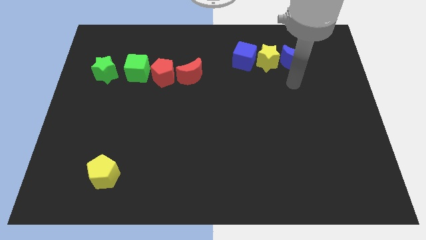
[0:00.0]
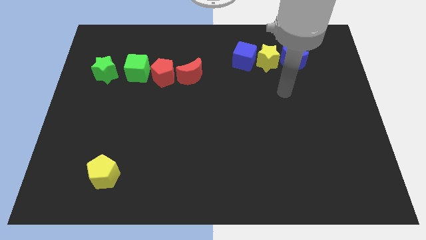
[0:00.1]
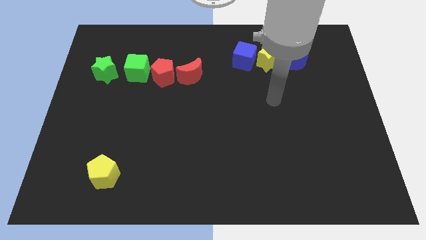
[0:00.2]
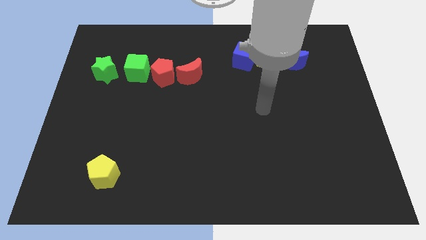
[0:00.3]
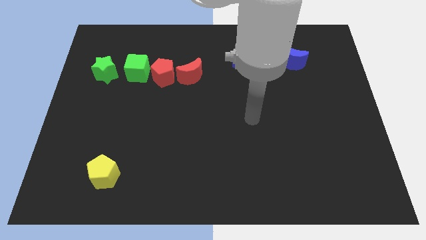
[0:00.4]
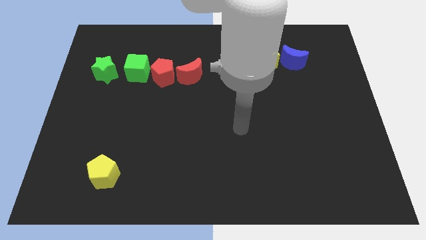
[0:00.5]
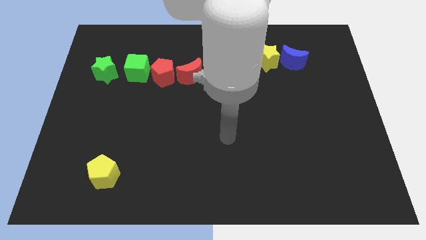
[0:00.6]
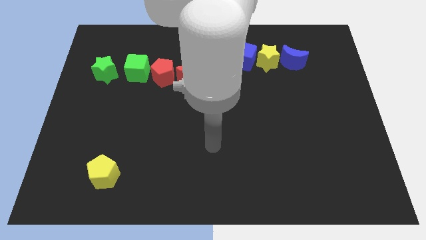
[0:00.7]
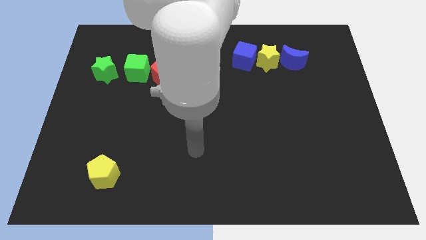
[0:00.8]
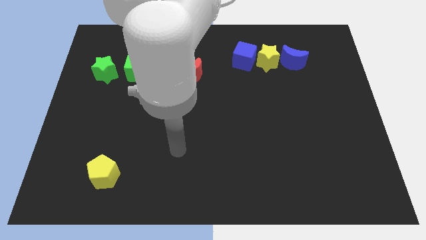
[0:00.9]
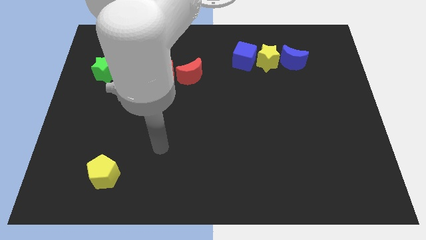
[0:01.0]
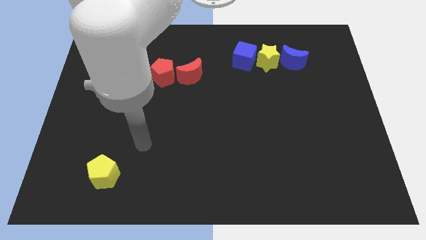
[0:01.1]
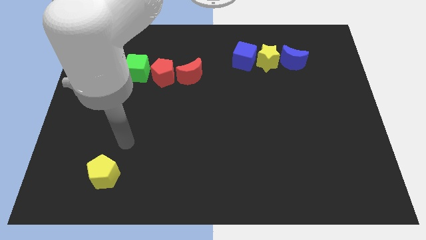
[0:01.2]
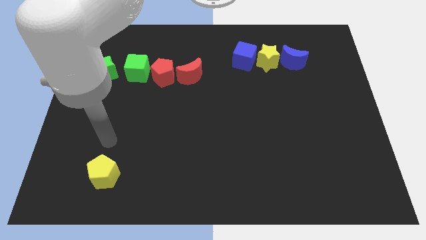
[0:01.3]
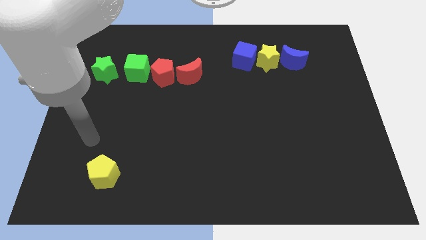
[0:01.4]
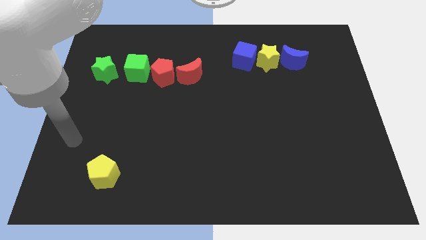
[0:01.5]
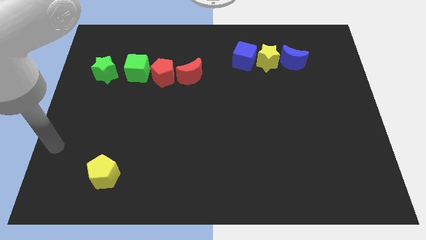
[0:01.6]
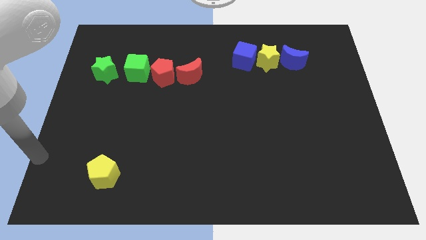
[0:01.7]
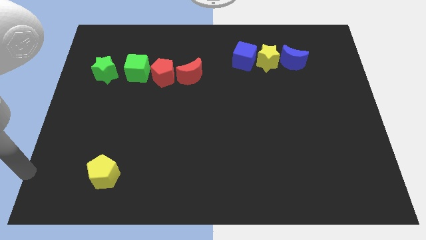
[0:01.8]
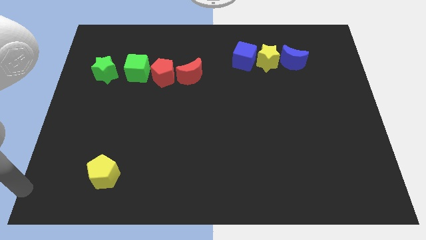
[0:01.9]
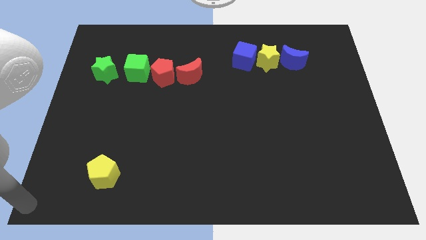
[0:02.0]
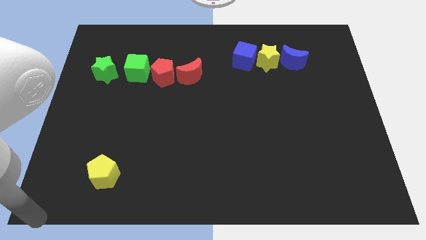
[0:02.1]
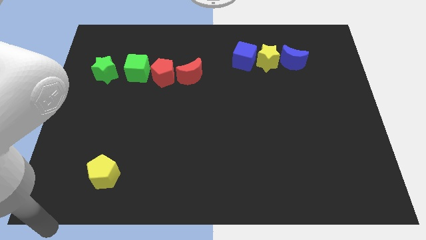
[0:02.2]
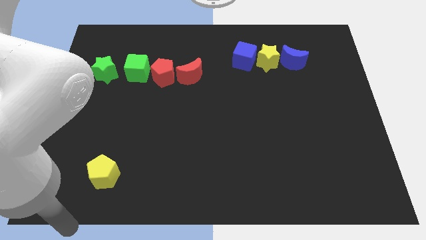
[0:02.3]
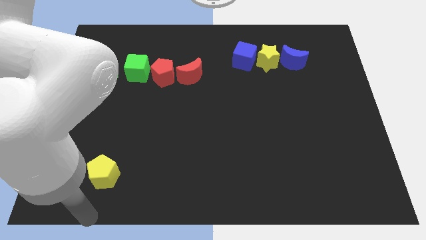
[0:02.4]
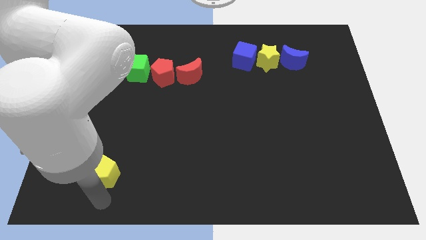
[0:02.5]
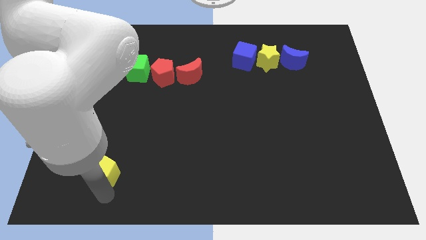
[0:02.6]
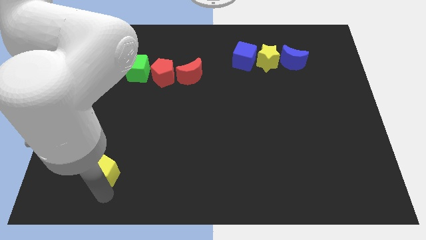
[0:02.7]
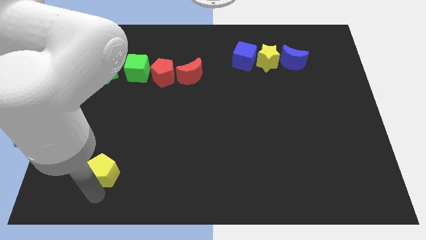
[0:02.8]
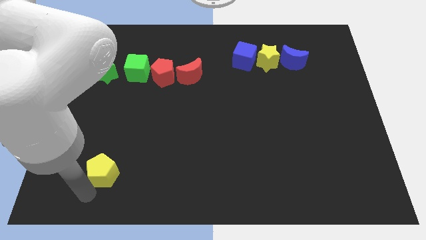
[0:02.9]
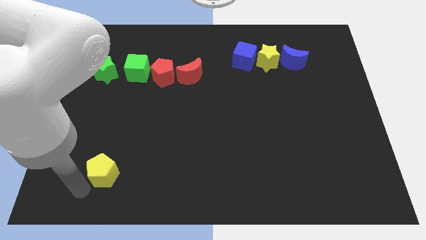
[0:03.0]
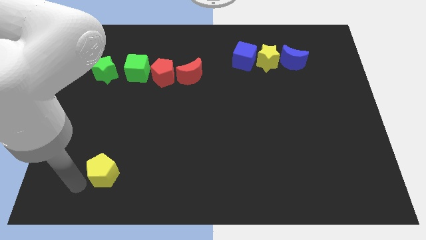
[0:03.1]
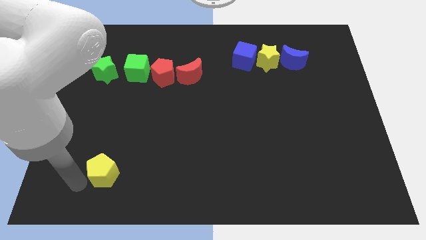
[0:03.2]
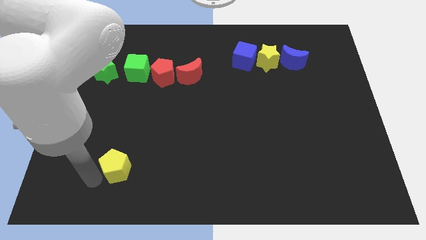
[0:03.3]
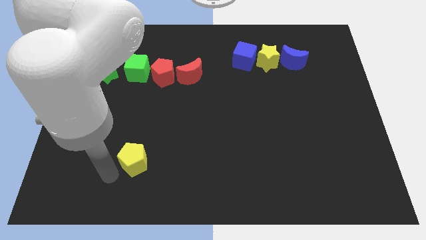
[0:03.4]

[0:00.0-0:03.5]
move the yellow pentagon vertically to the bottom side of the green cube

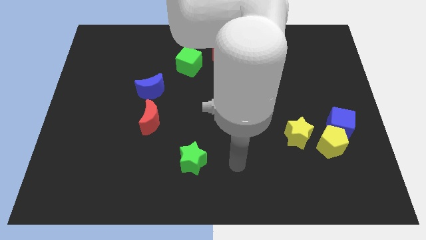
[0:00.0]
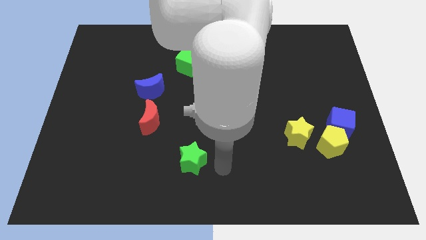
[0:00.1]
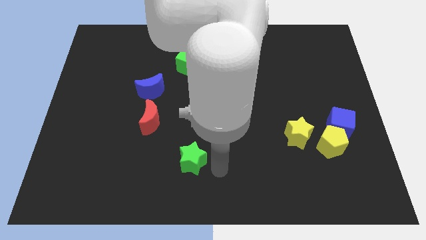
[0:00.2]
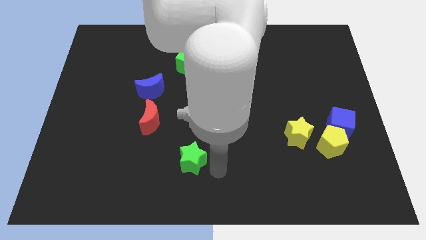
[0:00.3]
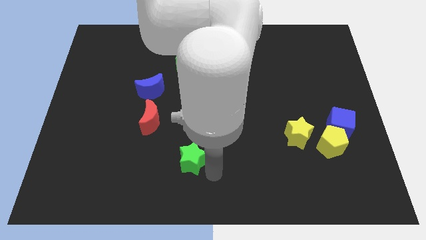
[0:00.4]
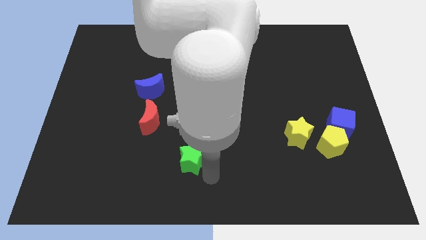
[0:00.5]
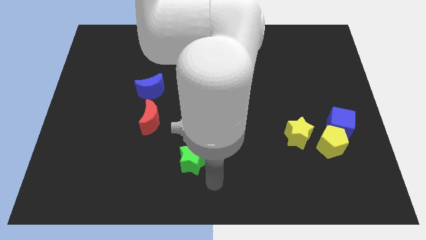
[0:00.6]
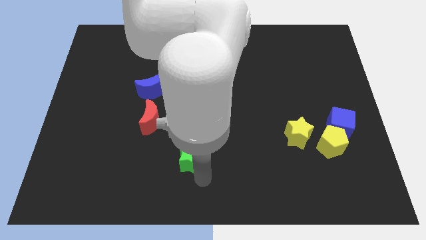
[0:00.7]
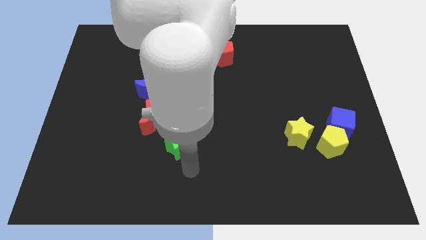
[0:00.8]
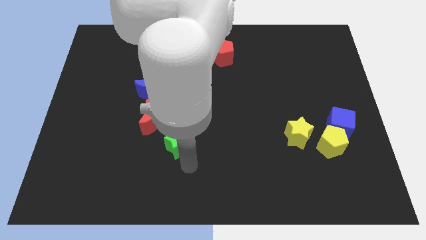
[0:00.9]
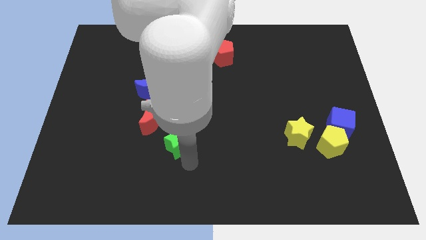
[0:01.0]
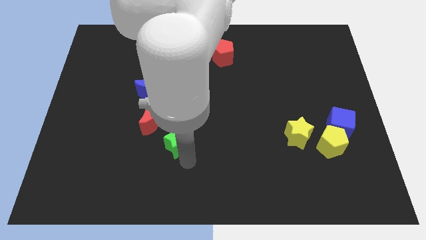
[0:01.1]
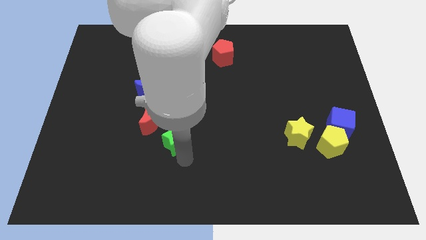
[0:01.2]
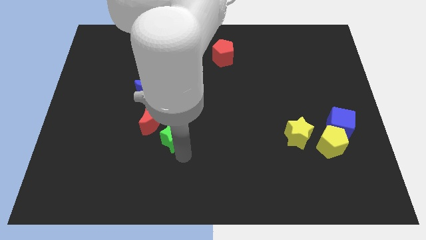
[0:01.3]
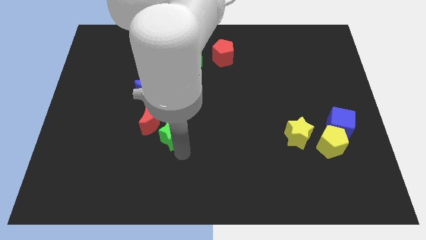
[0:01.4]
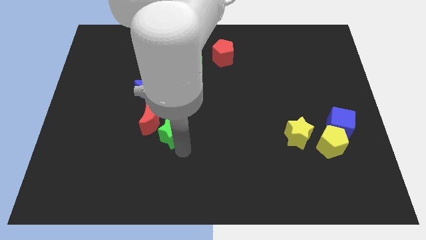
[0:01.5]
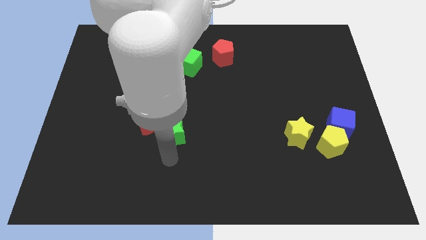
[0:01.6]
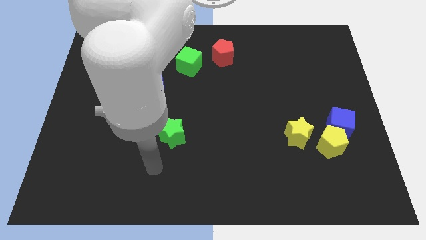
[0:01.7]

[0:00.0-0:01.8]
move the green star towards the right side of the red crescent

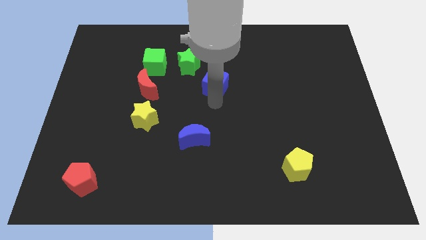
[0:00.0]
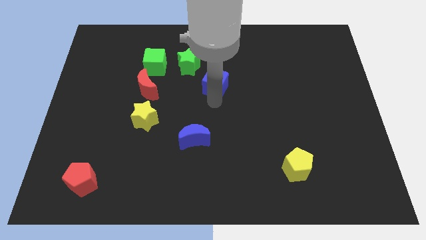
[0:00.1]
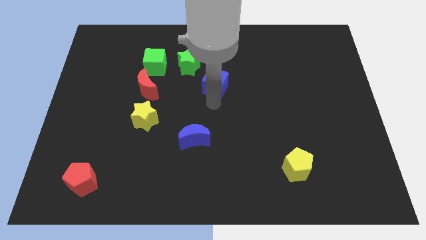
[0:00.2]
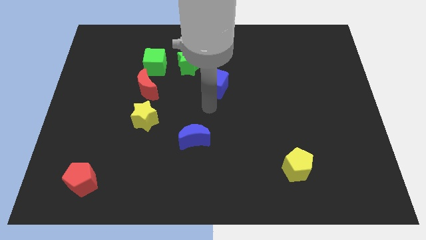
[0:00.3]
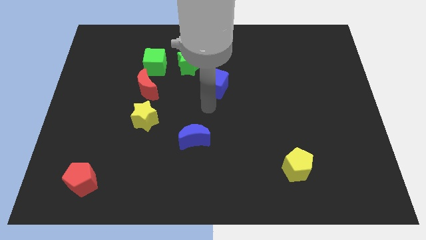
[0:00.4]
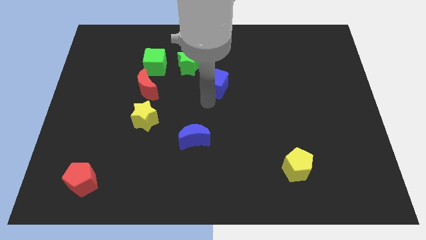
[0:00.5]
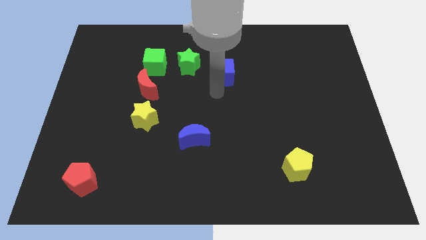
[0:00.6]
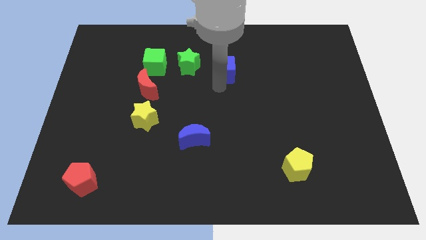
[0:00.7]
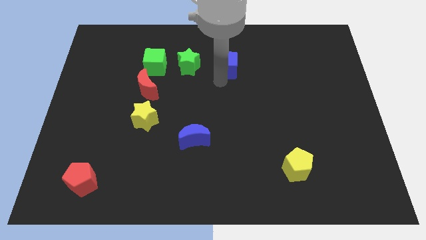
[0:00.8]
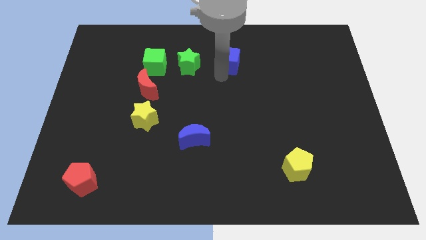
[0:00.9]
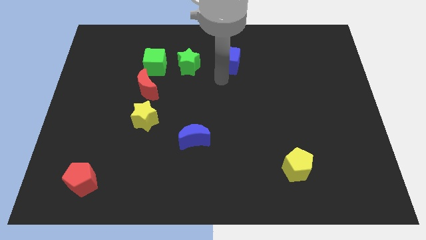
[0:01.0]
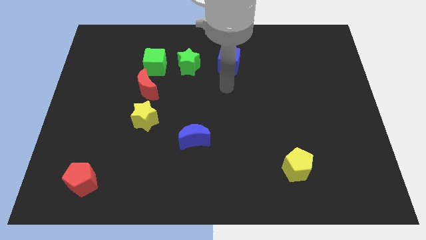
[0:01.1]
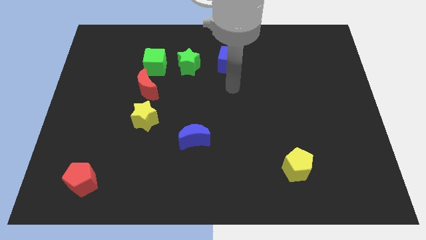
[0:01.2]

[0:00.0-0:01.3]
place the blue cube right to the green star

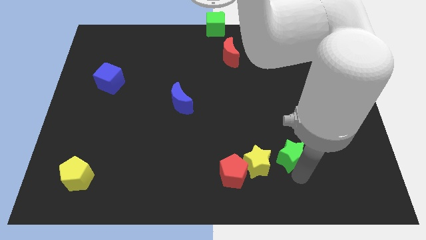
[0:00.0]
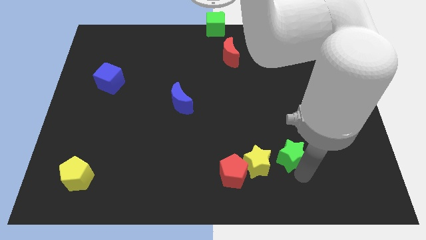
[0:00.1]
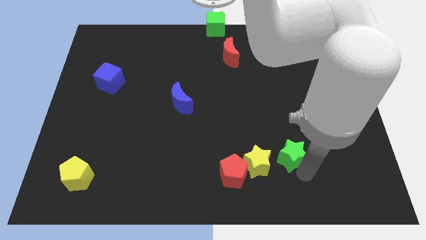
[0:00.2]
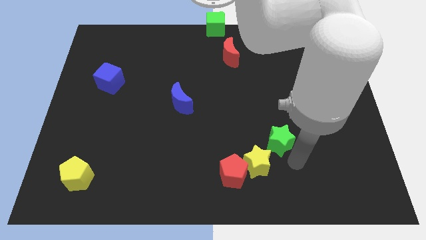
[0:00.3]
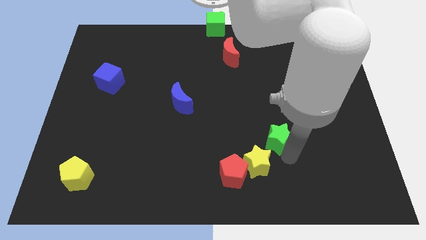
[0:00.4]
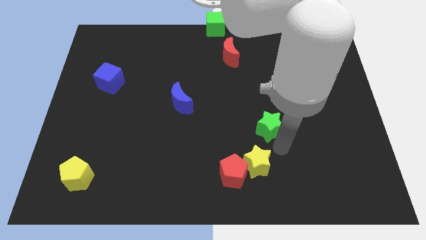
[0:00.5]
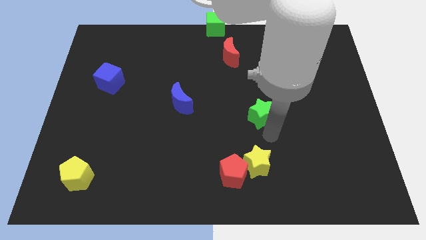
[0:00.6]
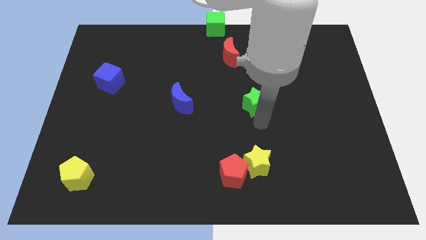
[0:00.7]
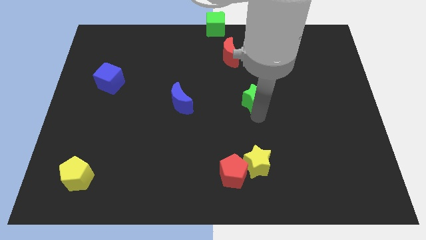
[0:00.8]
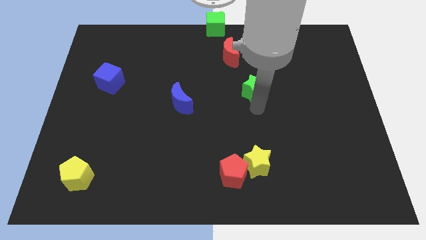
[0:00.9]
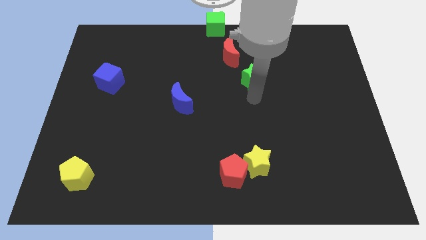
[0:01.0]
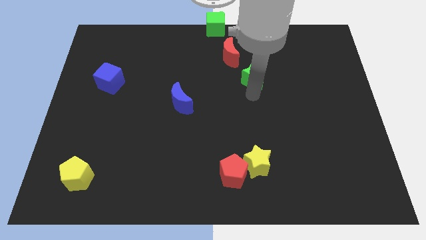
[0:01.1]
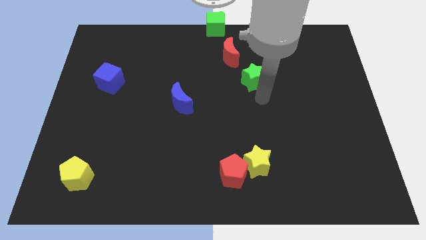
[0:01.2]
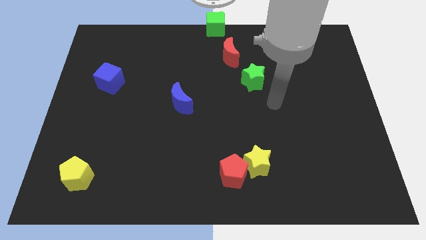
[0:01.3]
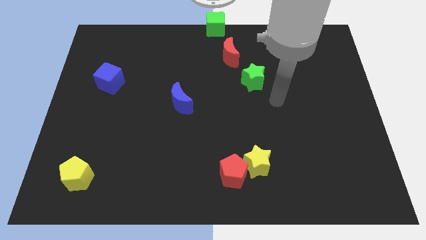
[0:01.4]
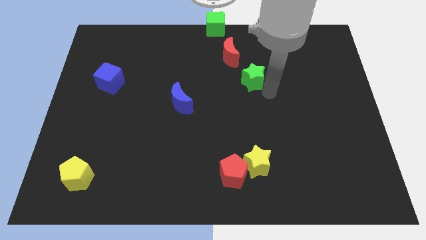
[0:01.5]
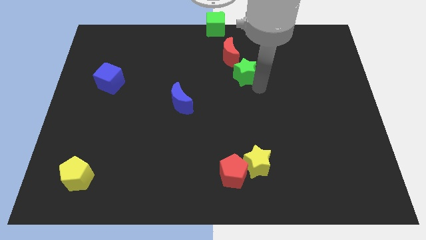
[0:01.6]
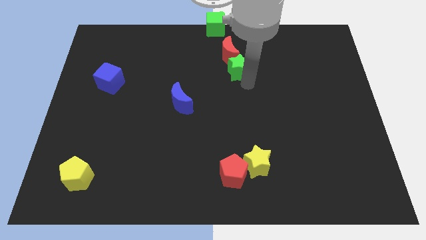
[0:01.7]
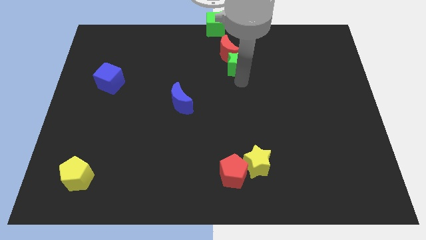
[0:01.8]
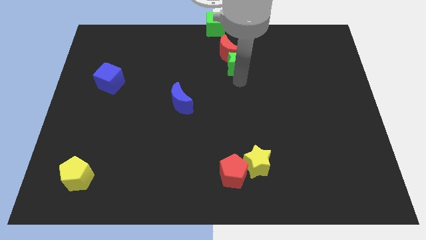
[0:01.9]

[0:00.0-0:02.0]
slide green star to the bottom right of the red moon

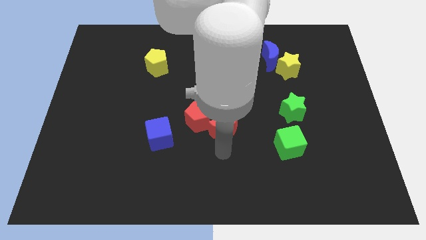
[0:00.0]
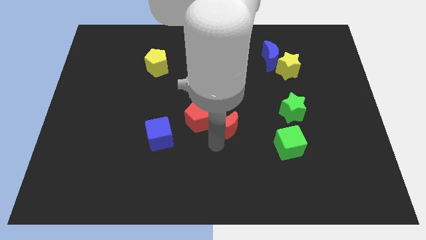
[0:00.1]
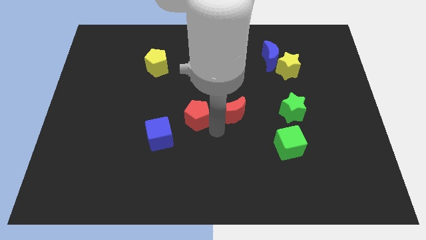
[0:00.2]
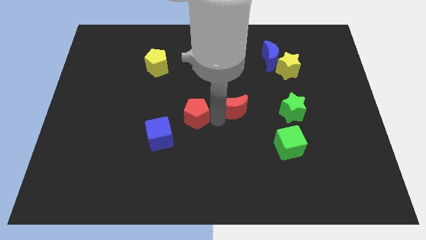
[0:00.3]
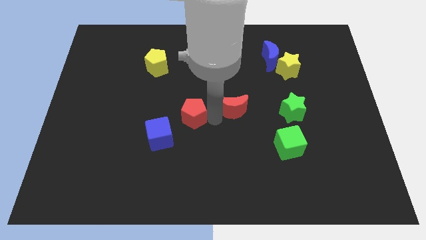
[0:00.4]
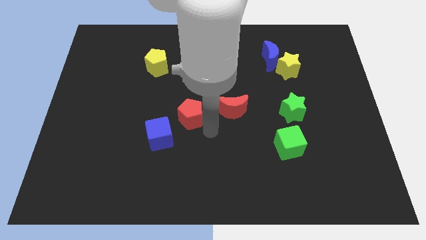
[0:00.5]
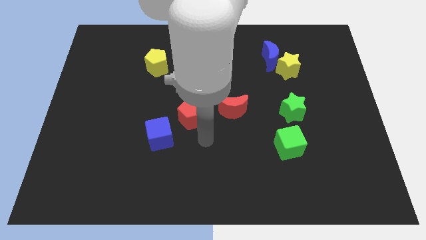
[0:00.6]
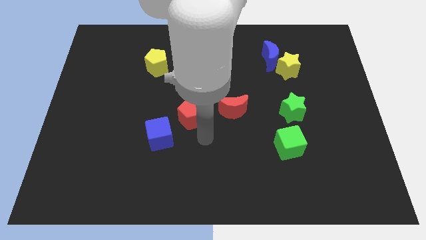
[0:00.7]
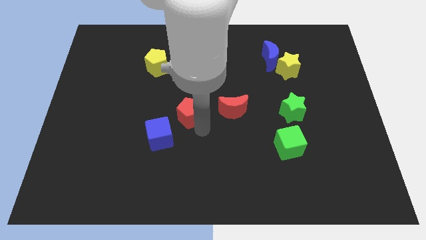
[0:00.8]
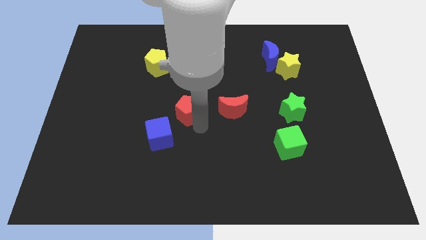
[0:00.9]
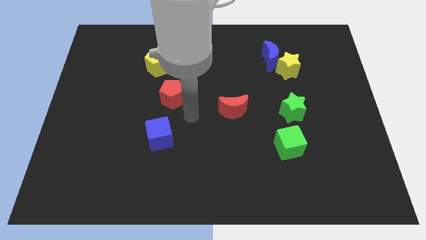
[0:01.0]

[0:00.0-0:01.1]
place red moon to the left of green star
